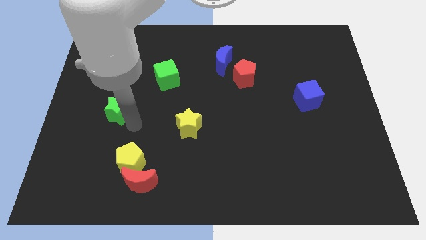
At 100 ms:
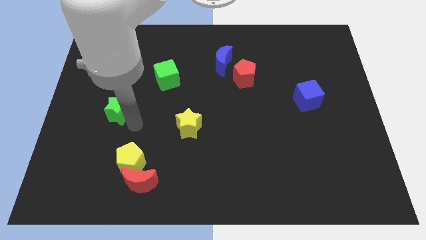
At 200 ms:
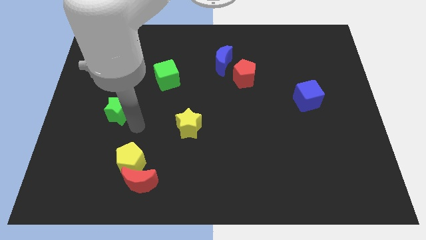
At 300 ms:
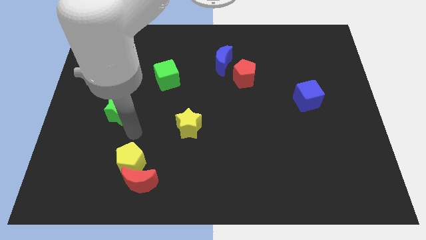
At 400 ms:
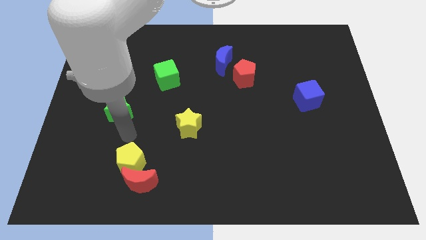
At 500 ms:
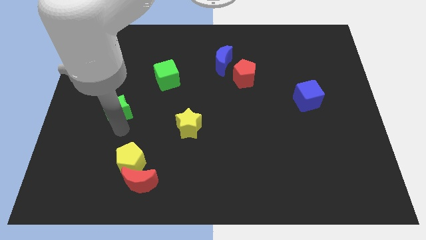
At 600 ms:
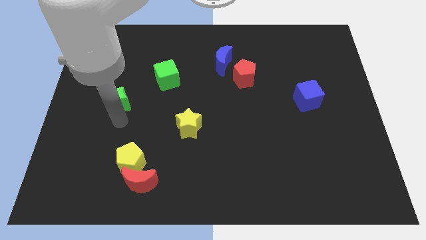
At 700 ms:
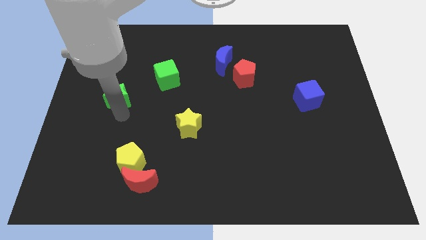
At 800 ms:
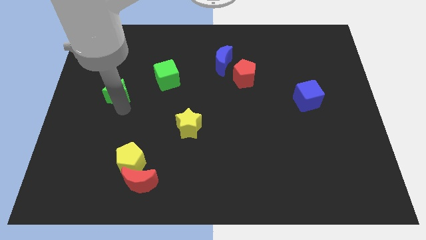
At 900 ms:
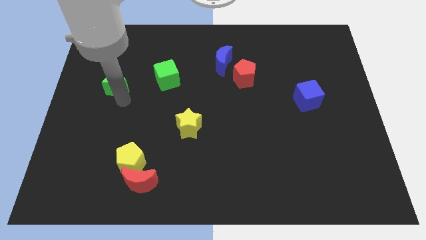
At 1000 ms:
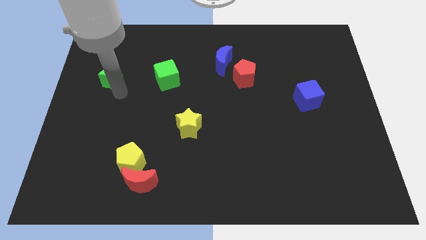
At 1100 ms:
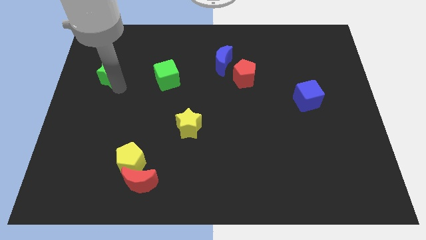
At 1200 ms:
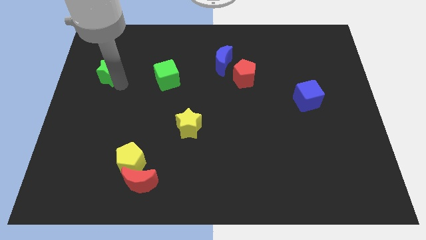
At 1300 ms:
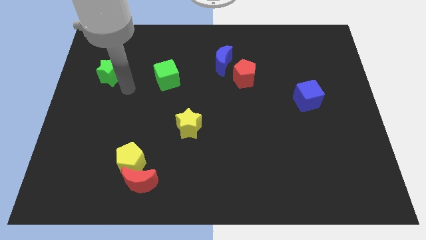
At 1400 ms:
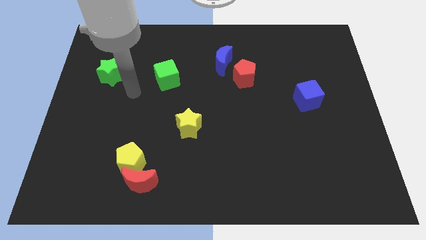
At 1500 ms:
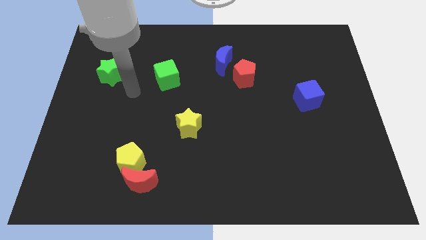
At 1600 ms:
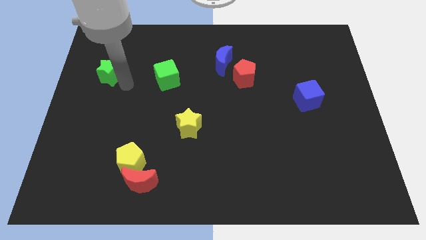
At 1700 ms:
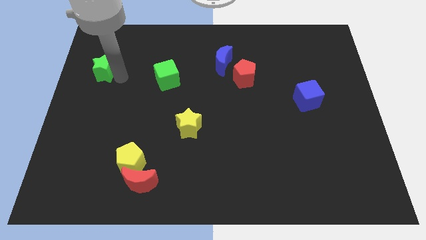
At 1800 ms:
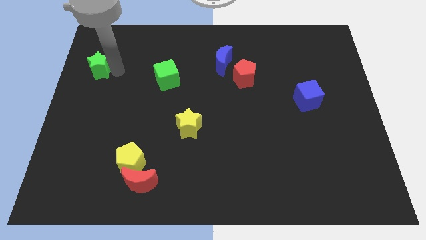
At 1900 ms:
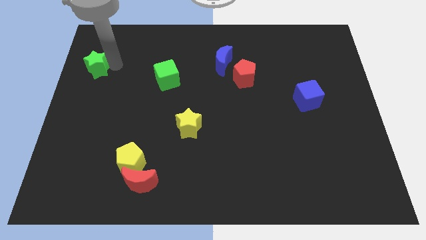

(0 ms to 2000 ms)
place the green star tp the left of the green cube

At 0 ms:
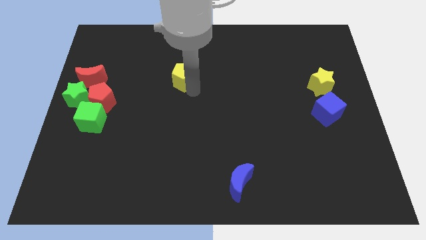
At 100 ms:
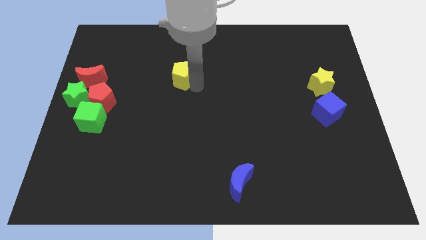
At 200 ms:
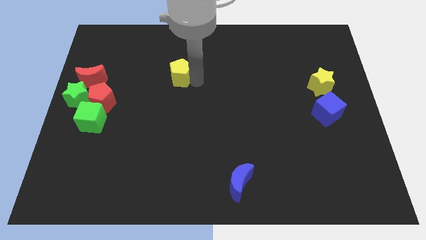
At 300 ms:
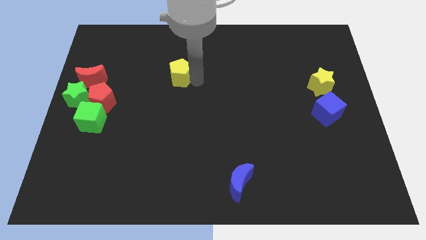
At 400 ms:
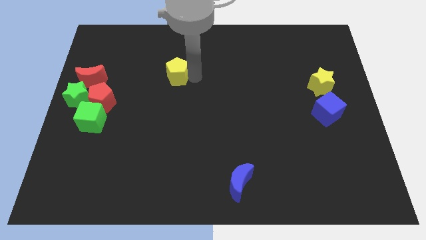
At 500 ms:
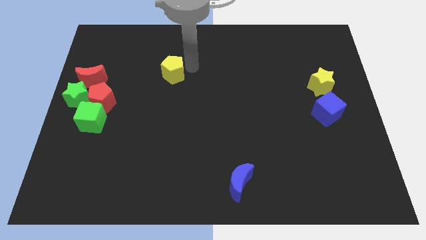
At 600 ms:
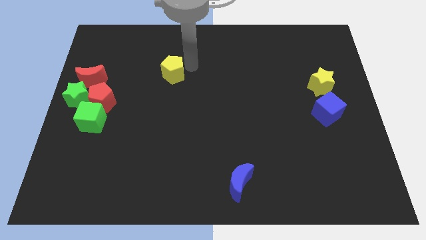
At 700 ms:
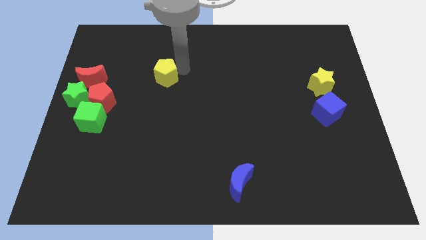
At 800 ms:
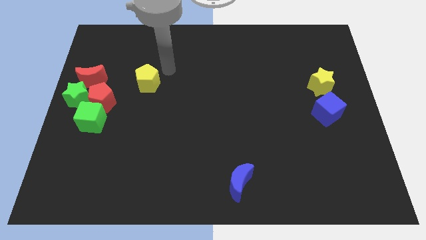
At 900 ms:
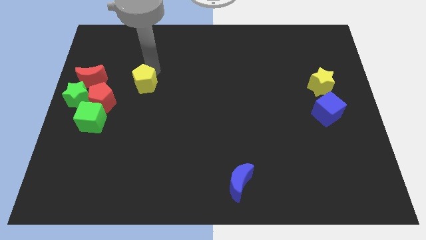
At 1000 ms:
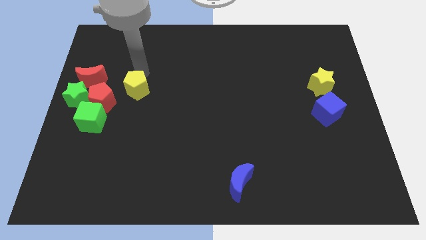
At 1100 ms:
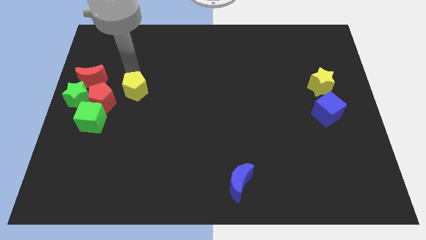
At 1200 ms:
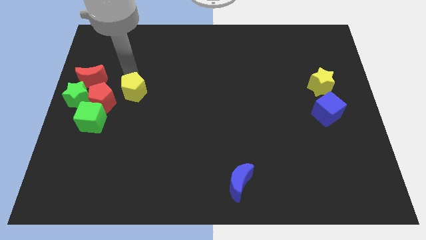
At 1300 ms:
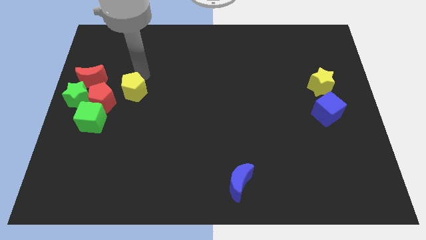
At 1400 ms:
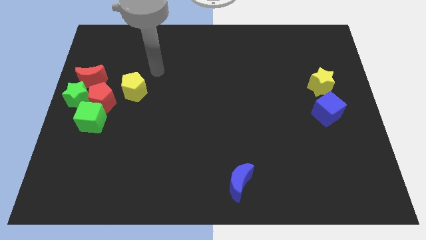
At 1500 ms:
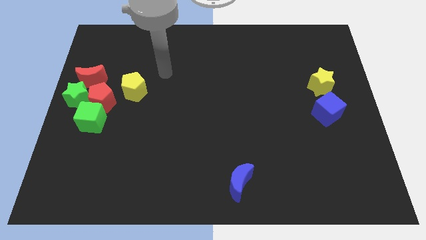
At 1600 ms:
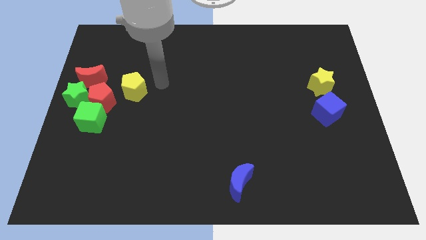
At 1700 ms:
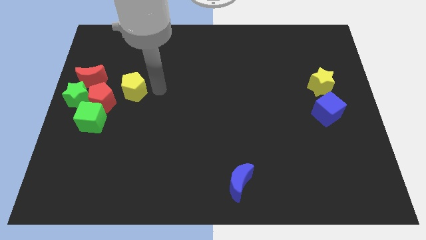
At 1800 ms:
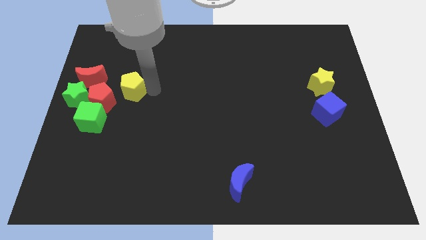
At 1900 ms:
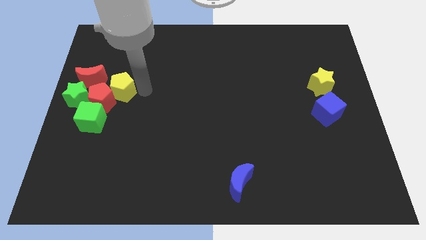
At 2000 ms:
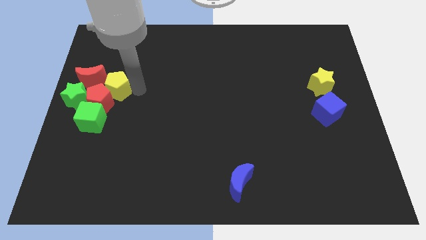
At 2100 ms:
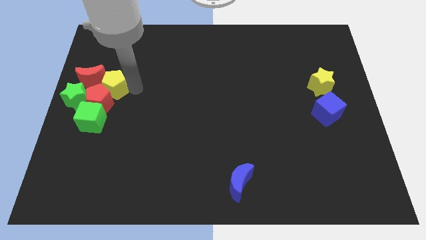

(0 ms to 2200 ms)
attach the yellow pentagon to the red blocks

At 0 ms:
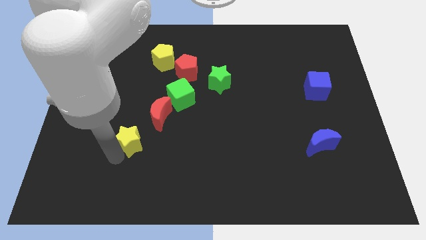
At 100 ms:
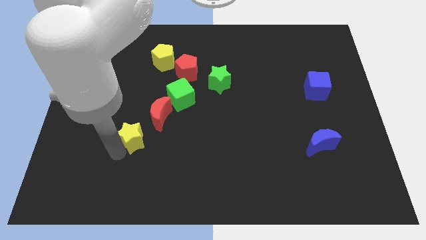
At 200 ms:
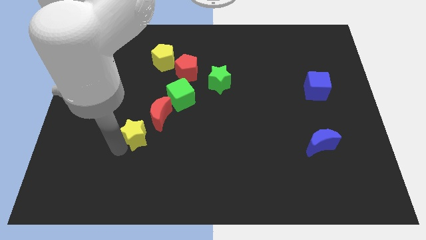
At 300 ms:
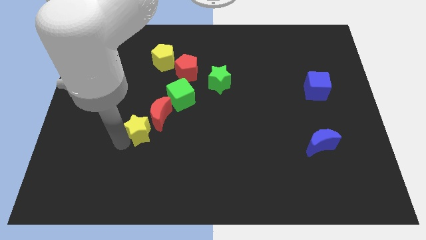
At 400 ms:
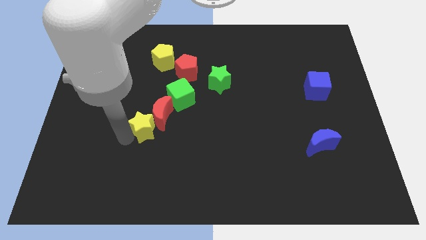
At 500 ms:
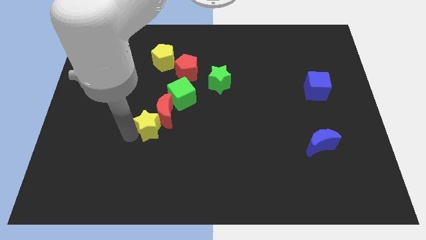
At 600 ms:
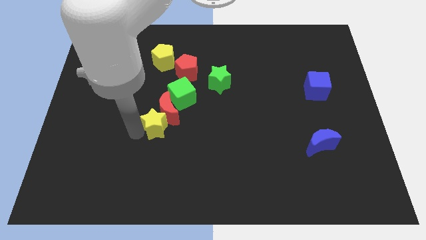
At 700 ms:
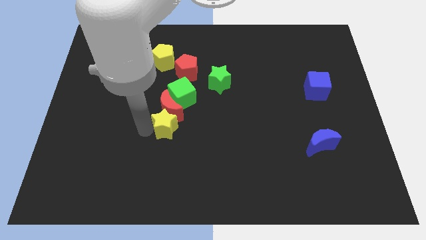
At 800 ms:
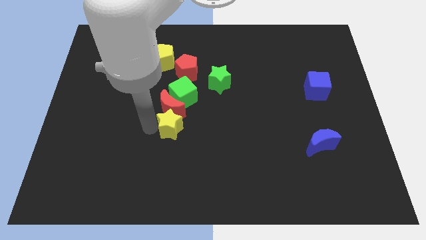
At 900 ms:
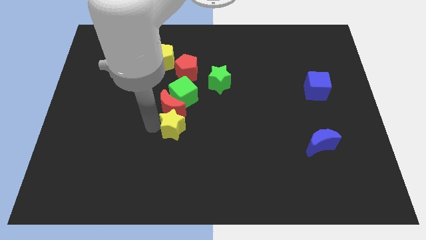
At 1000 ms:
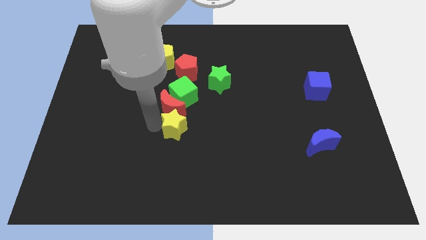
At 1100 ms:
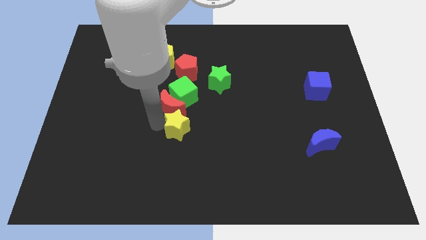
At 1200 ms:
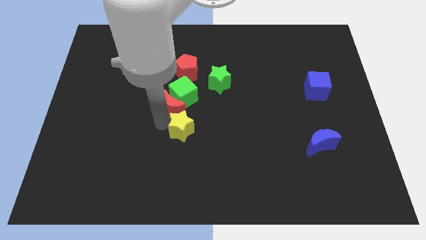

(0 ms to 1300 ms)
move yellow star at the bottom of red moon

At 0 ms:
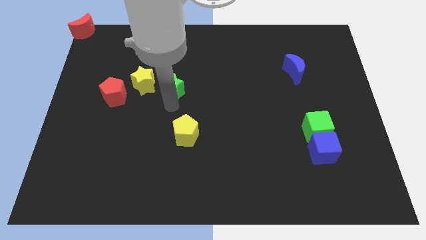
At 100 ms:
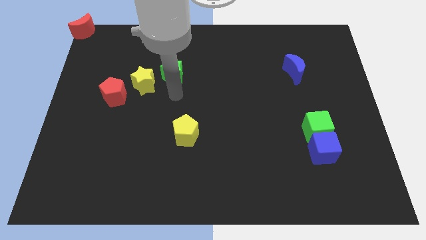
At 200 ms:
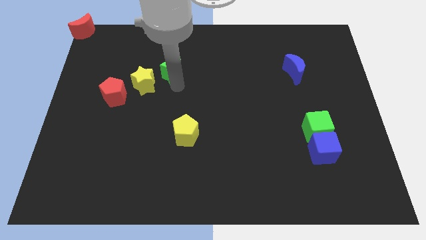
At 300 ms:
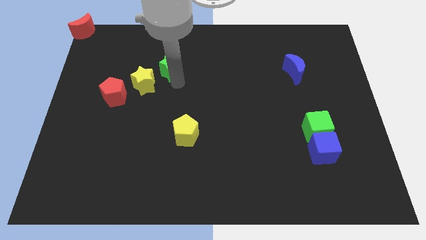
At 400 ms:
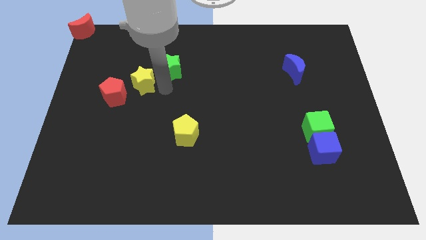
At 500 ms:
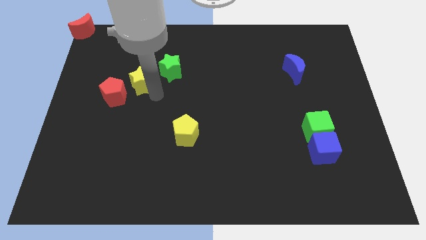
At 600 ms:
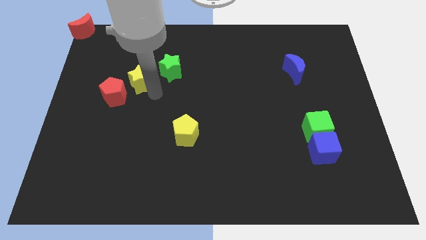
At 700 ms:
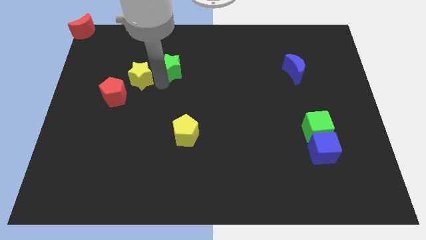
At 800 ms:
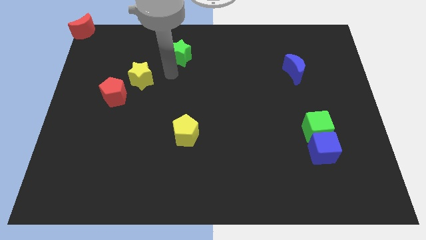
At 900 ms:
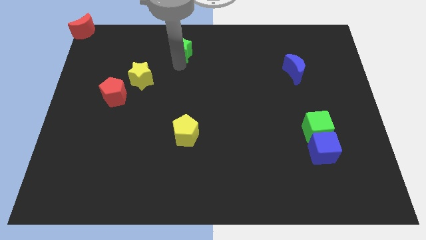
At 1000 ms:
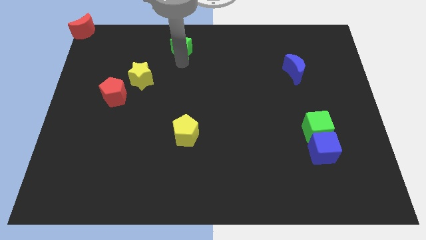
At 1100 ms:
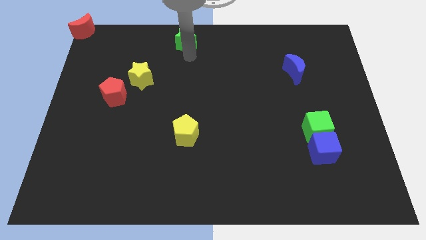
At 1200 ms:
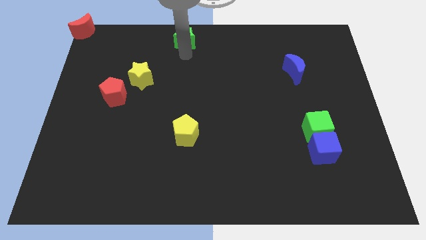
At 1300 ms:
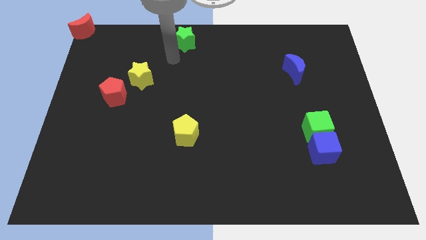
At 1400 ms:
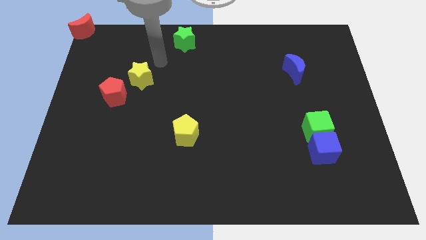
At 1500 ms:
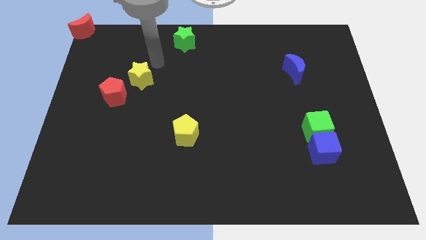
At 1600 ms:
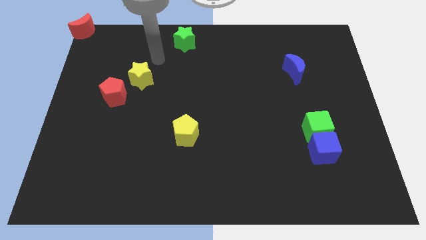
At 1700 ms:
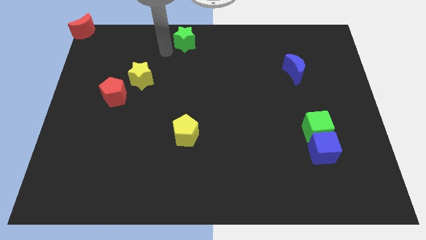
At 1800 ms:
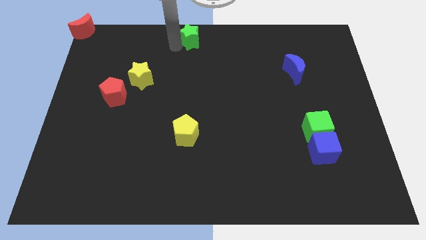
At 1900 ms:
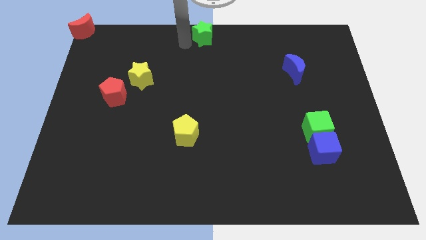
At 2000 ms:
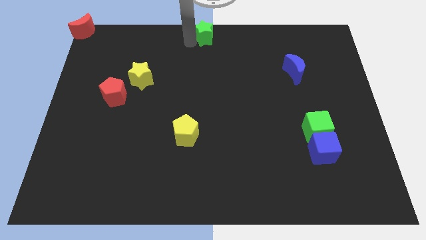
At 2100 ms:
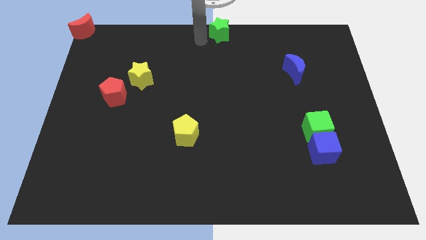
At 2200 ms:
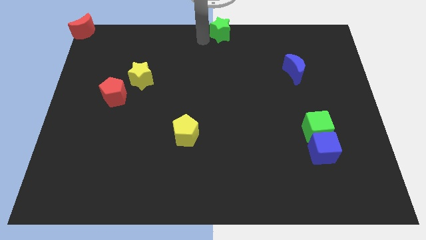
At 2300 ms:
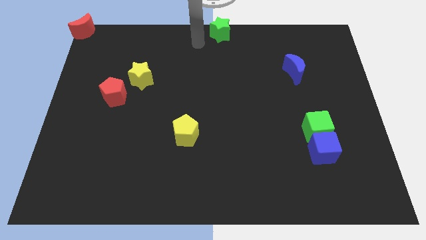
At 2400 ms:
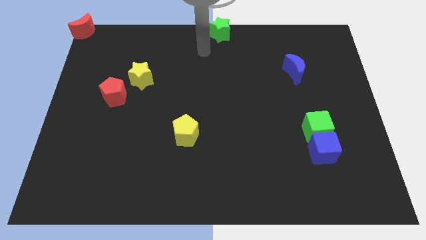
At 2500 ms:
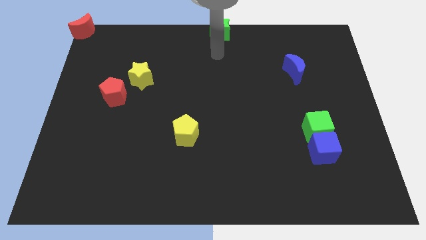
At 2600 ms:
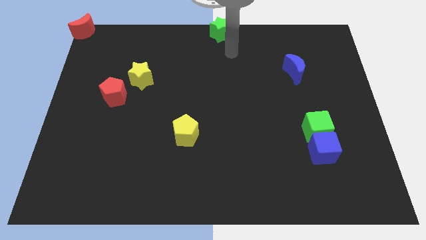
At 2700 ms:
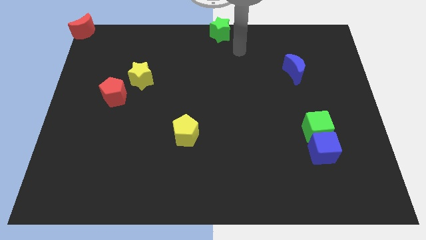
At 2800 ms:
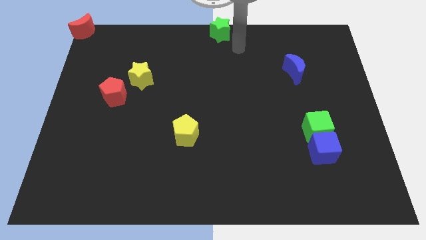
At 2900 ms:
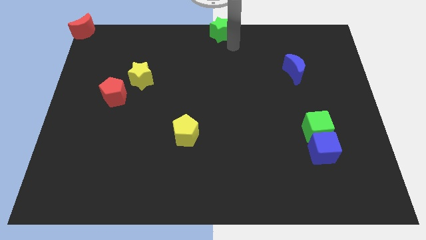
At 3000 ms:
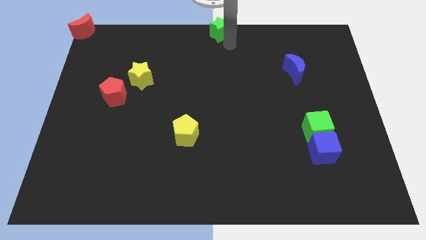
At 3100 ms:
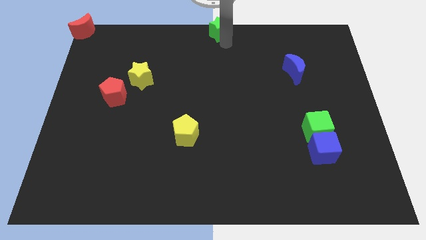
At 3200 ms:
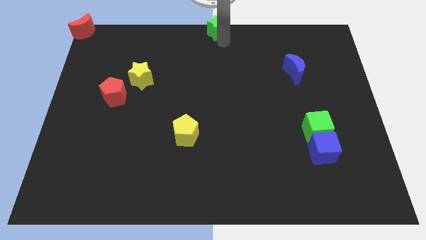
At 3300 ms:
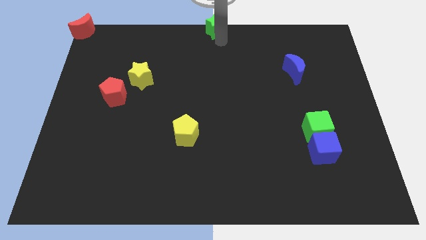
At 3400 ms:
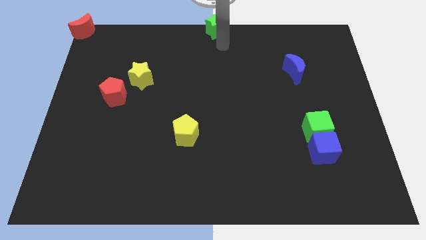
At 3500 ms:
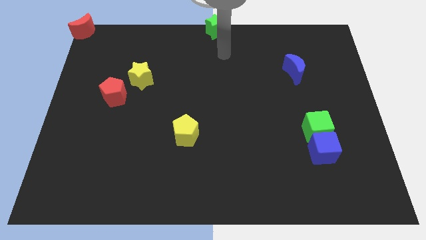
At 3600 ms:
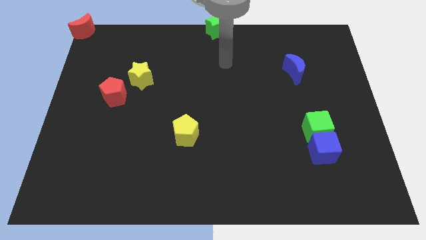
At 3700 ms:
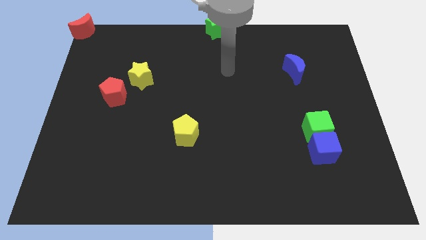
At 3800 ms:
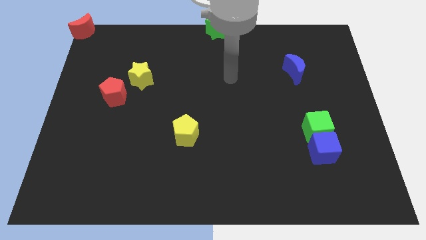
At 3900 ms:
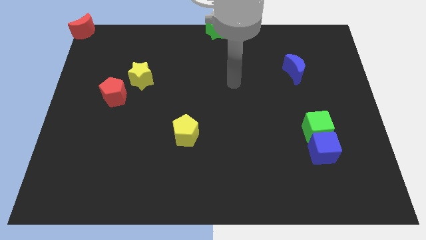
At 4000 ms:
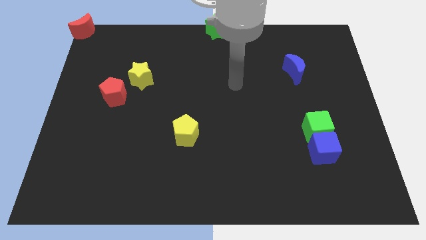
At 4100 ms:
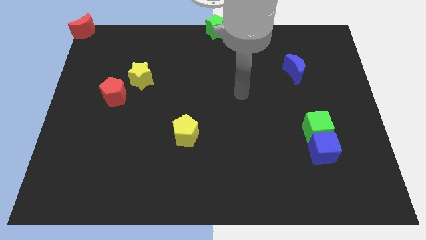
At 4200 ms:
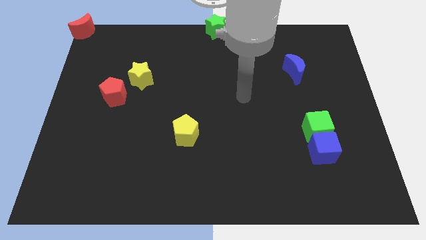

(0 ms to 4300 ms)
put the green star at the top center
